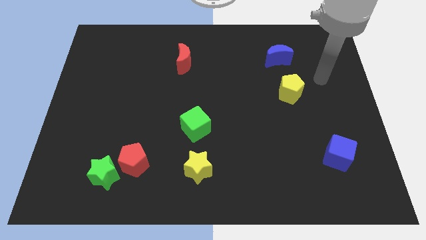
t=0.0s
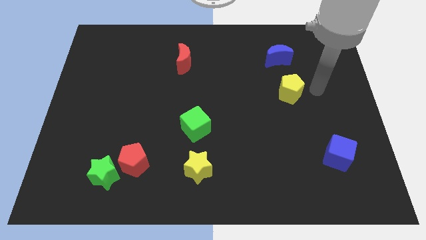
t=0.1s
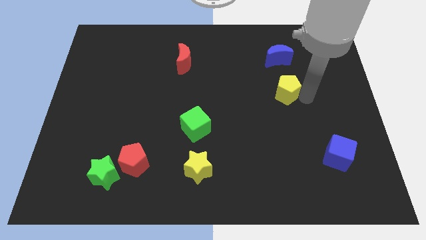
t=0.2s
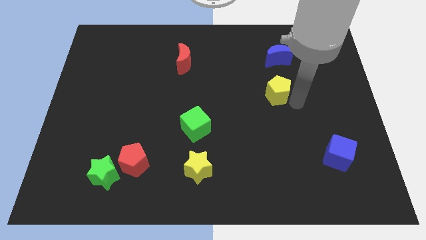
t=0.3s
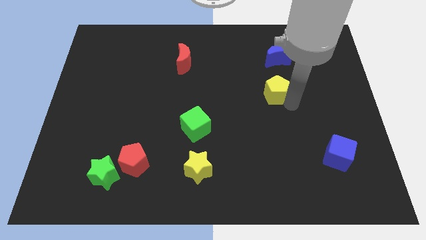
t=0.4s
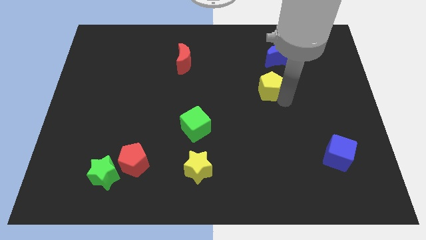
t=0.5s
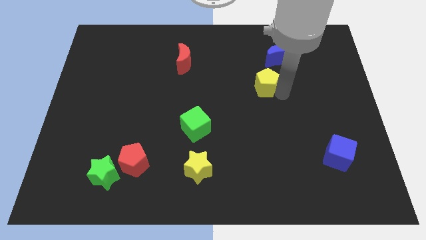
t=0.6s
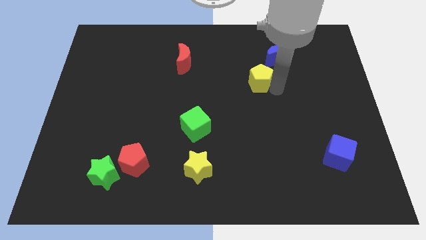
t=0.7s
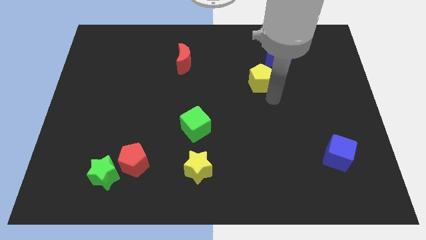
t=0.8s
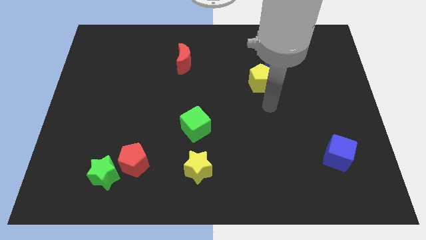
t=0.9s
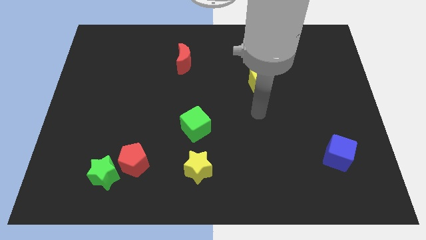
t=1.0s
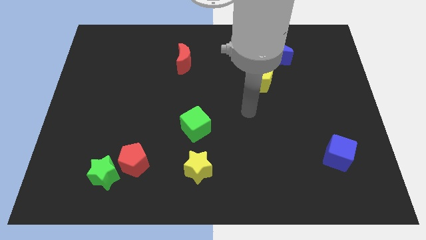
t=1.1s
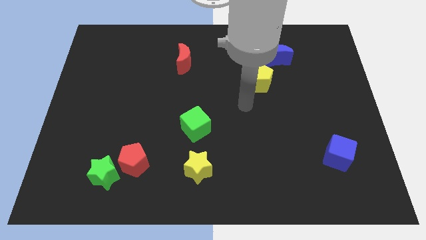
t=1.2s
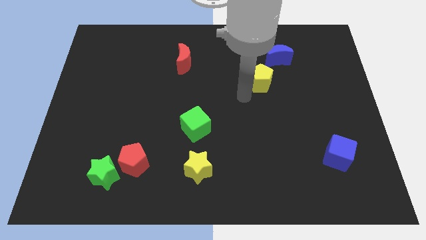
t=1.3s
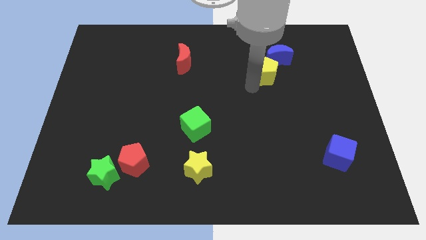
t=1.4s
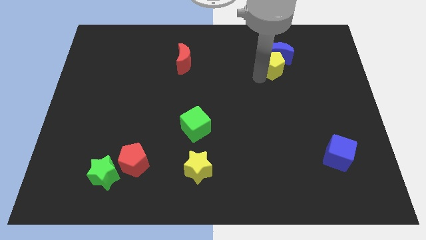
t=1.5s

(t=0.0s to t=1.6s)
slide the yellow pentagon into the bottom side of the blue crescent

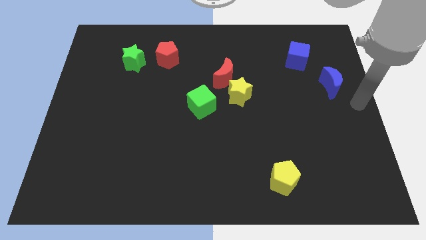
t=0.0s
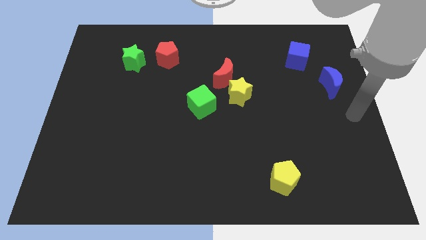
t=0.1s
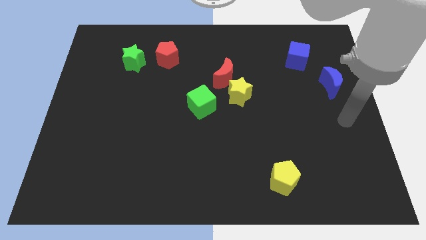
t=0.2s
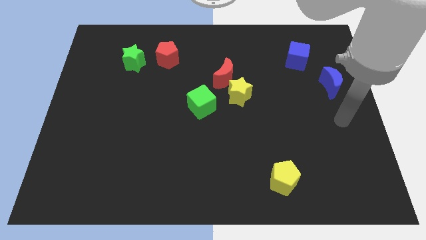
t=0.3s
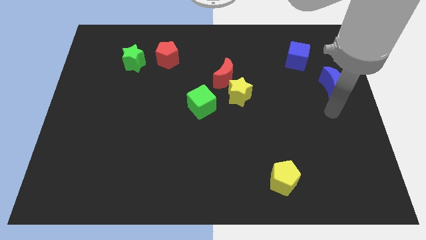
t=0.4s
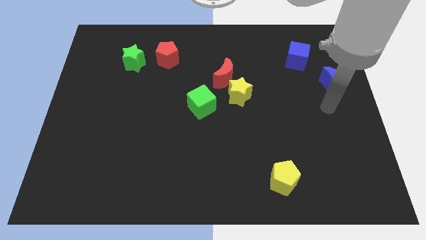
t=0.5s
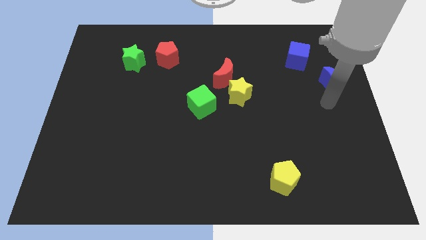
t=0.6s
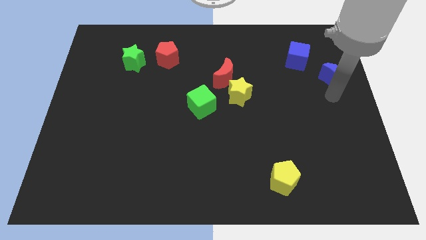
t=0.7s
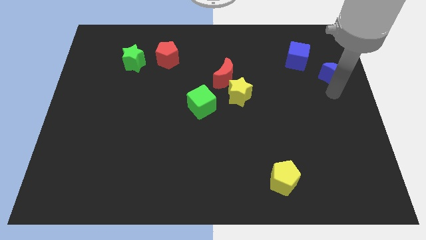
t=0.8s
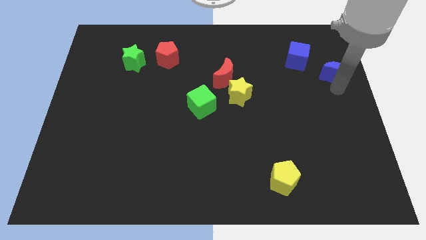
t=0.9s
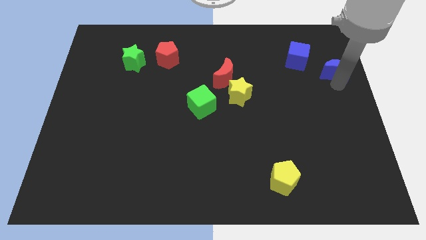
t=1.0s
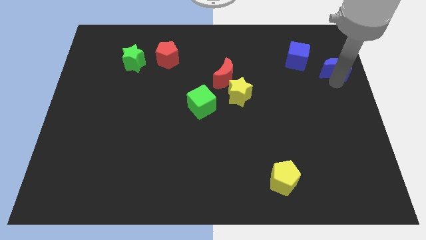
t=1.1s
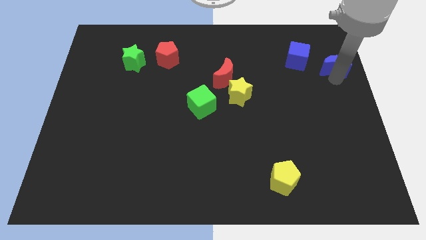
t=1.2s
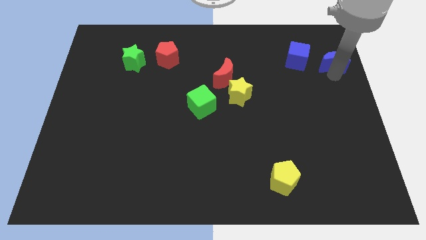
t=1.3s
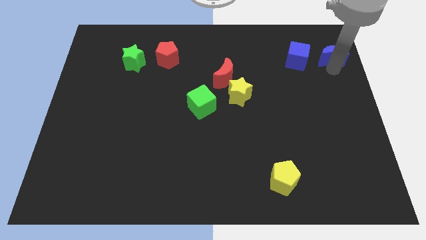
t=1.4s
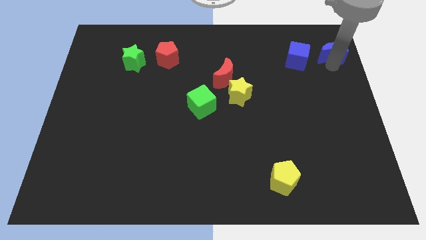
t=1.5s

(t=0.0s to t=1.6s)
push the blue moon next to the right side of the blue cube

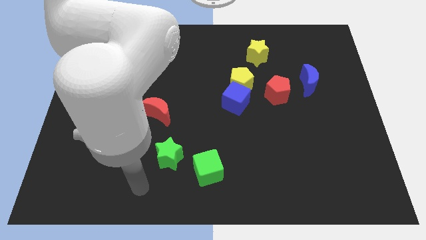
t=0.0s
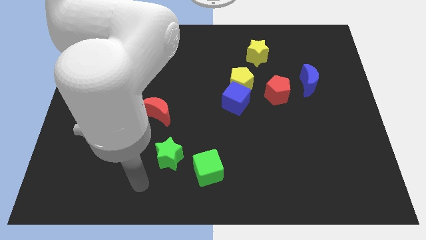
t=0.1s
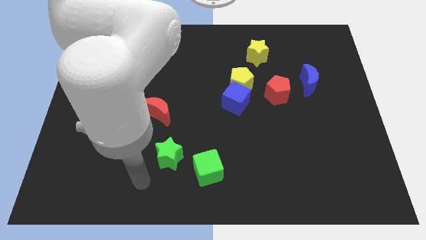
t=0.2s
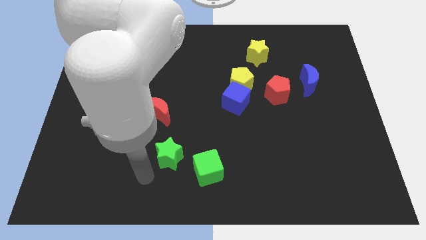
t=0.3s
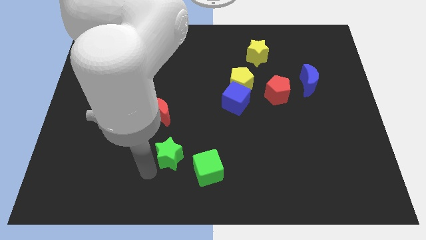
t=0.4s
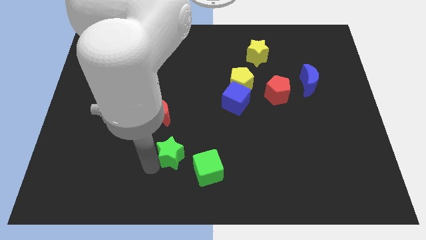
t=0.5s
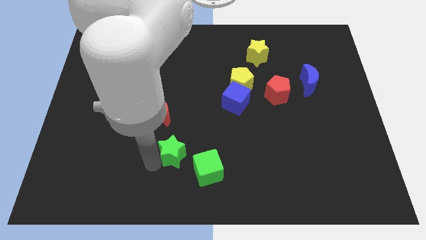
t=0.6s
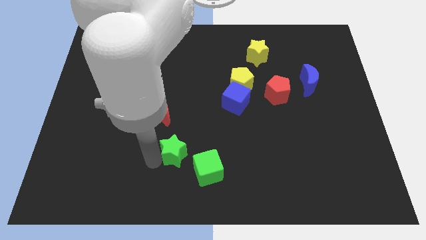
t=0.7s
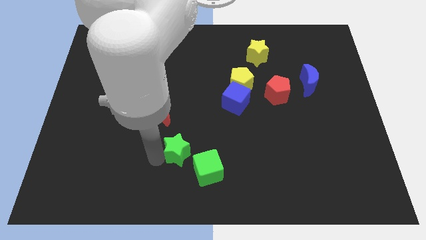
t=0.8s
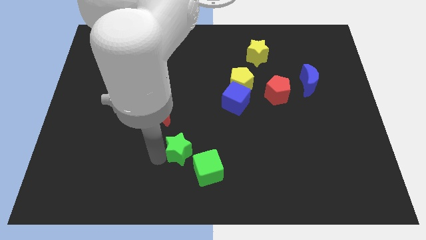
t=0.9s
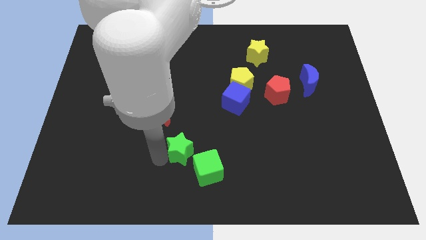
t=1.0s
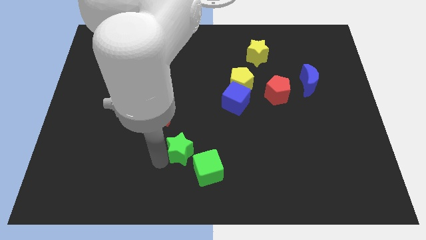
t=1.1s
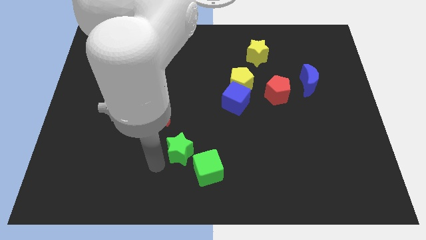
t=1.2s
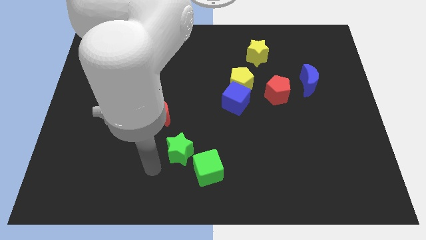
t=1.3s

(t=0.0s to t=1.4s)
adjust the green star between the red moon and green cube

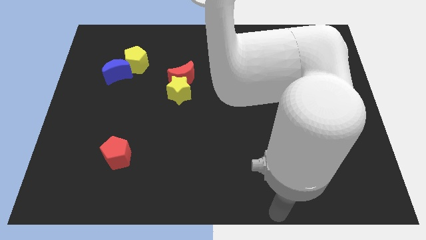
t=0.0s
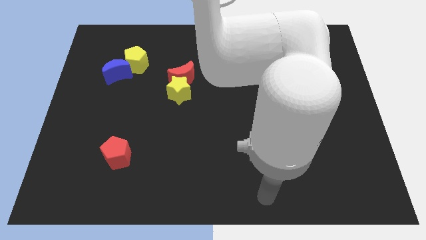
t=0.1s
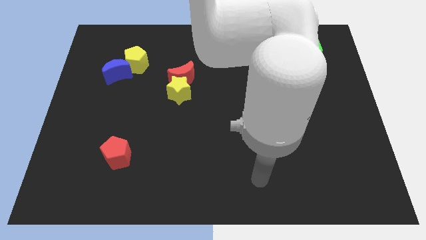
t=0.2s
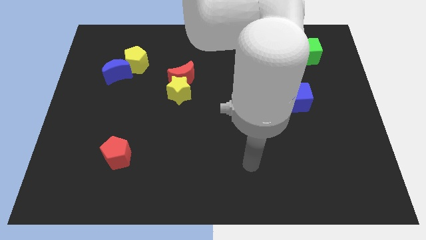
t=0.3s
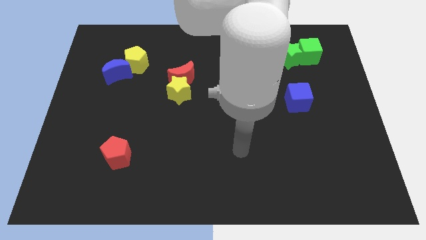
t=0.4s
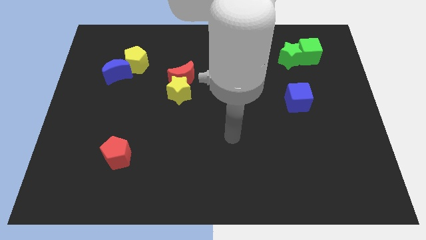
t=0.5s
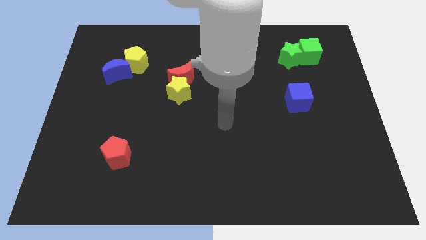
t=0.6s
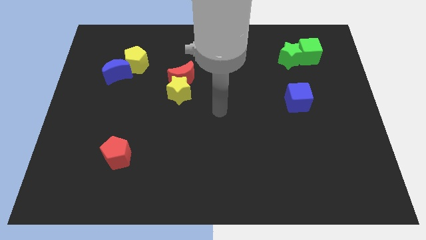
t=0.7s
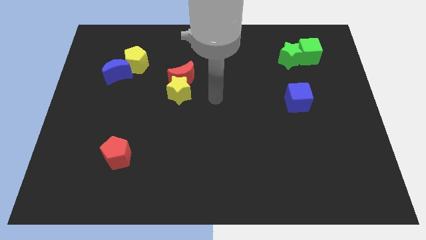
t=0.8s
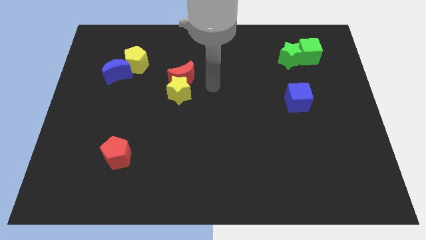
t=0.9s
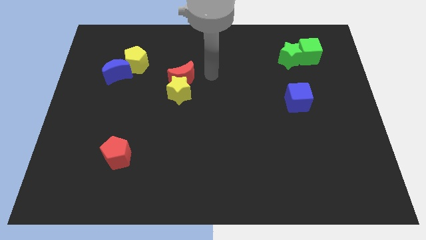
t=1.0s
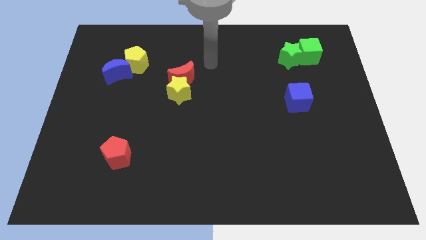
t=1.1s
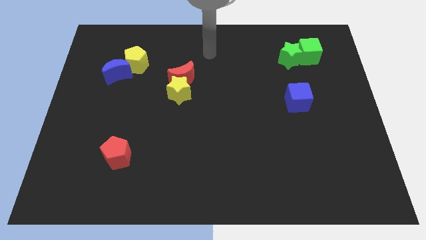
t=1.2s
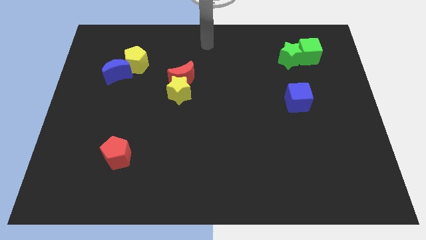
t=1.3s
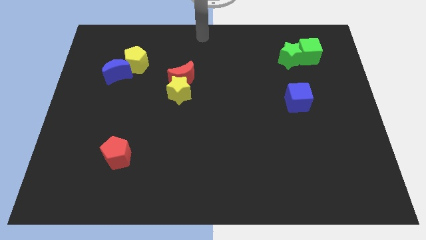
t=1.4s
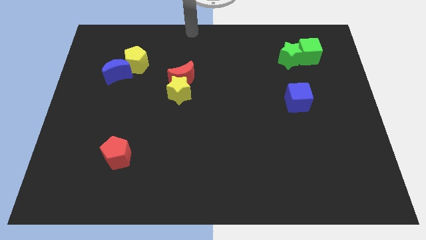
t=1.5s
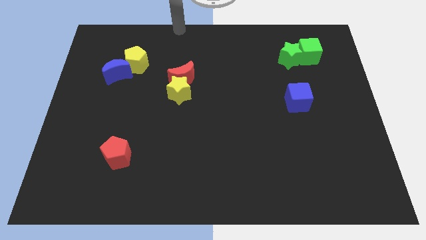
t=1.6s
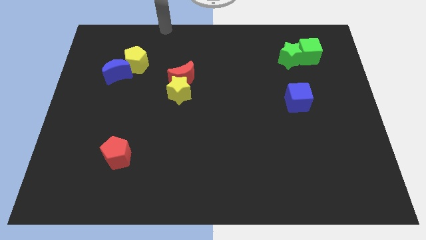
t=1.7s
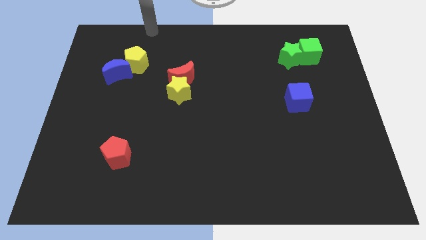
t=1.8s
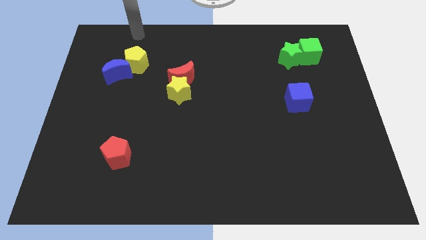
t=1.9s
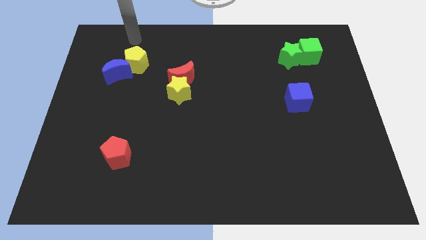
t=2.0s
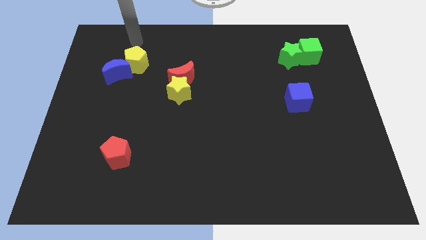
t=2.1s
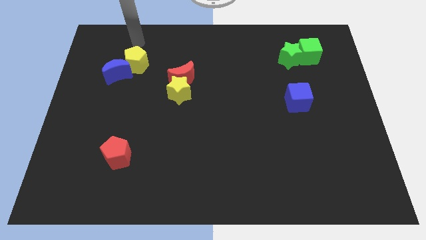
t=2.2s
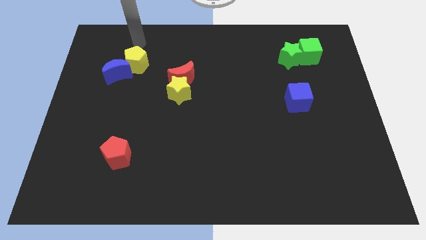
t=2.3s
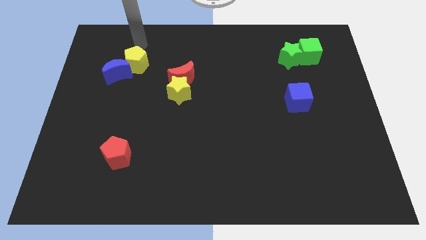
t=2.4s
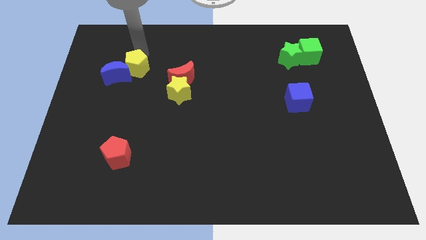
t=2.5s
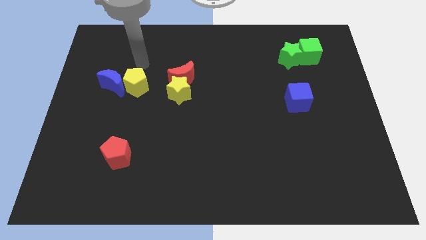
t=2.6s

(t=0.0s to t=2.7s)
move the arm to the yellow pentagon

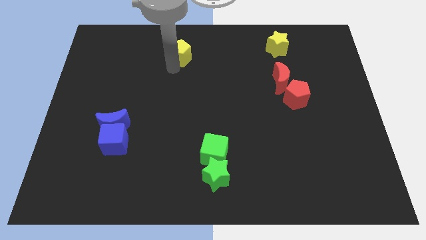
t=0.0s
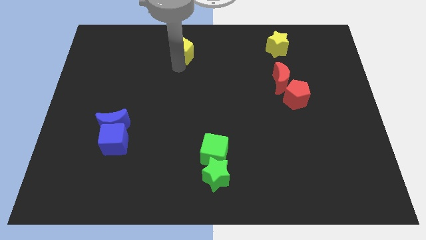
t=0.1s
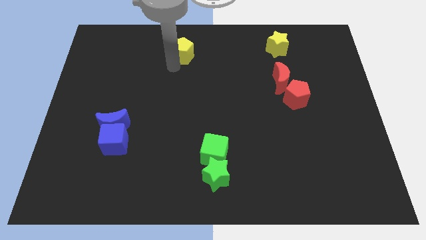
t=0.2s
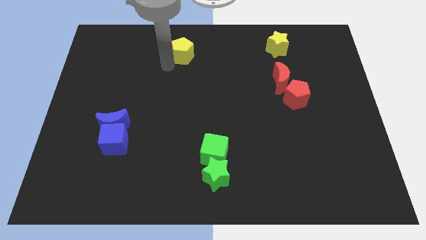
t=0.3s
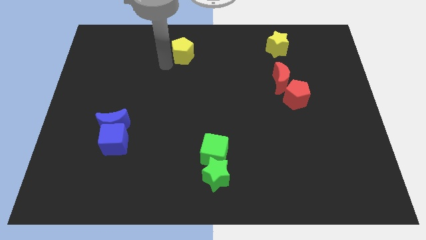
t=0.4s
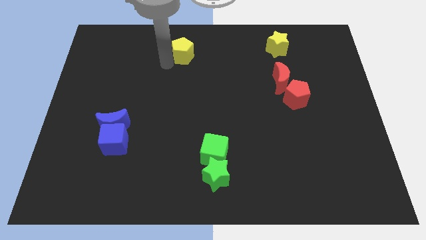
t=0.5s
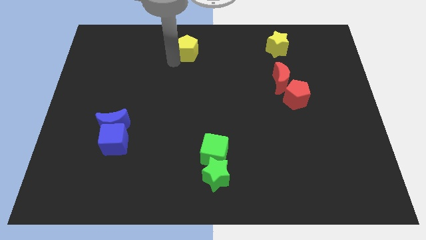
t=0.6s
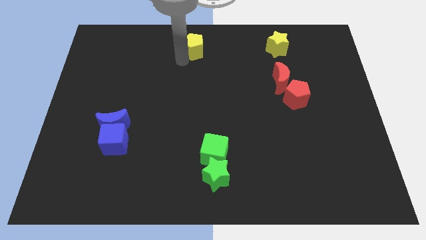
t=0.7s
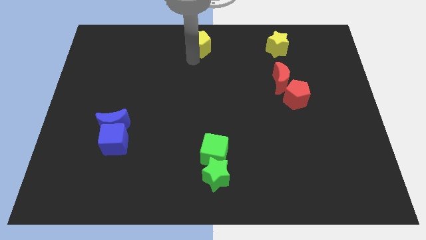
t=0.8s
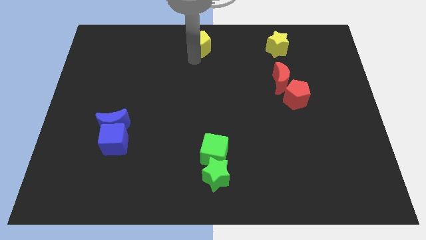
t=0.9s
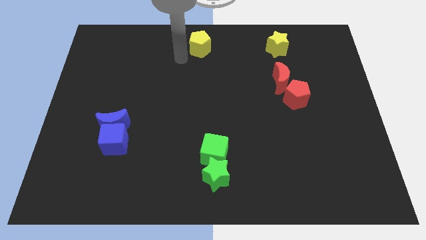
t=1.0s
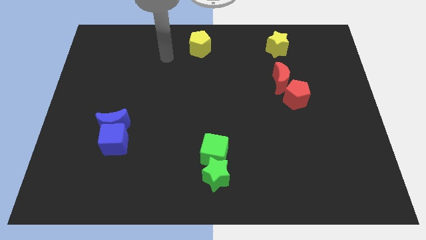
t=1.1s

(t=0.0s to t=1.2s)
place the yellow pentagon left to the yellow star

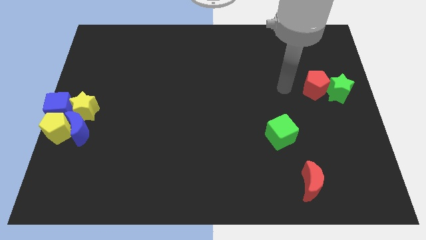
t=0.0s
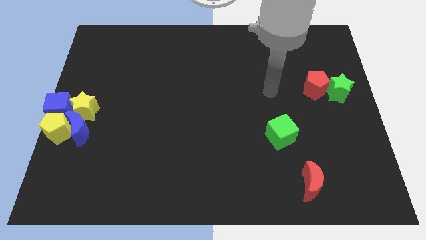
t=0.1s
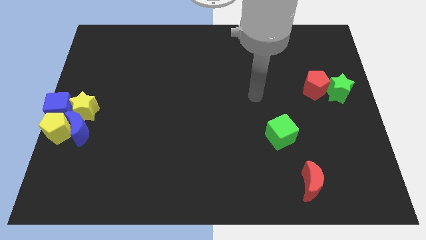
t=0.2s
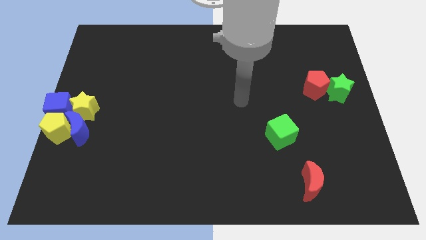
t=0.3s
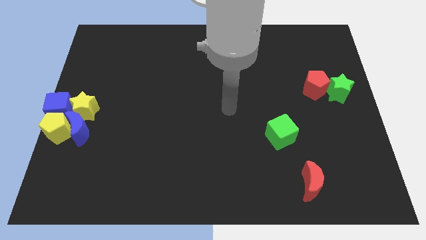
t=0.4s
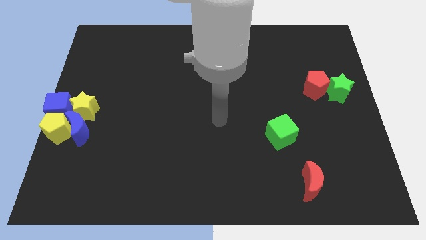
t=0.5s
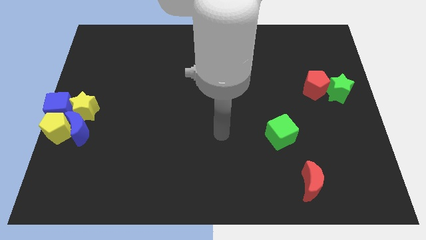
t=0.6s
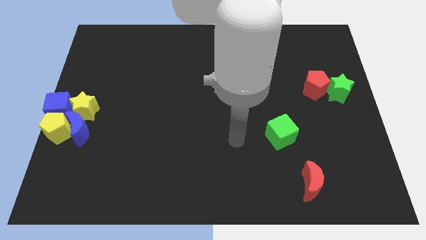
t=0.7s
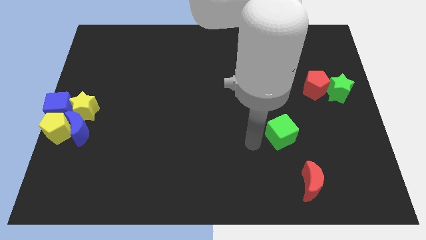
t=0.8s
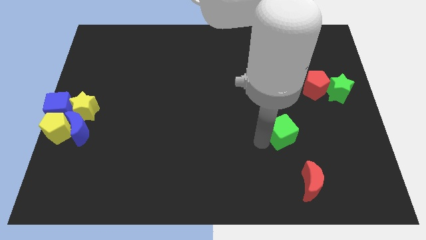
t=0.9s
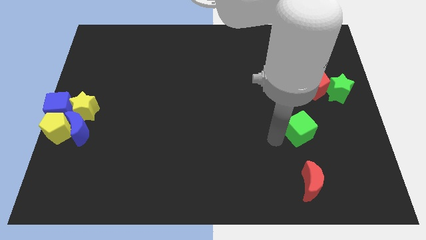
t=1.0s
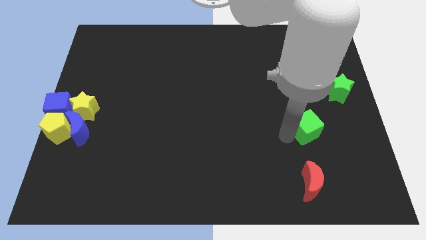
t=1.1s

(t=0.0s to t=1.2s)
push the green cube to the top side of the red crescent
